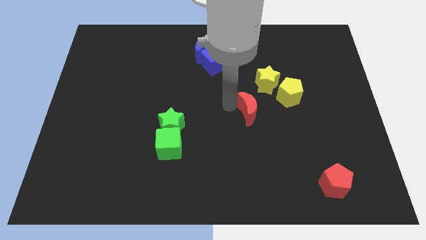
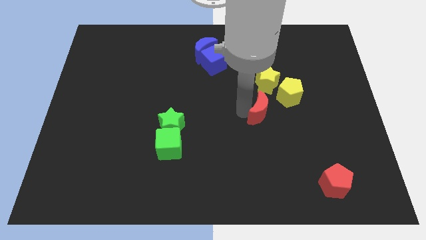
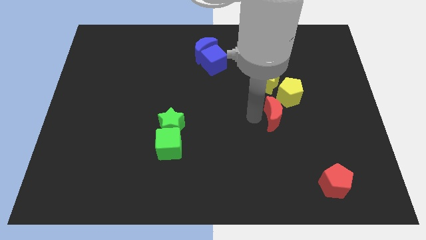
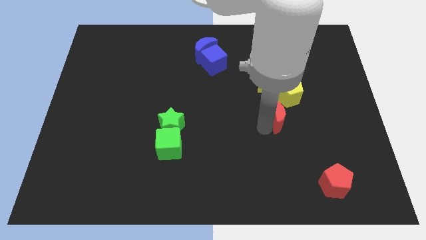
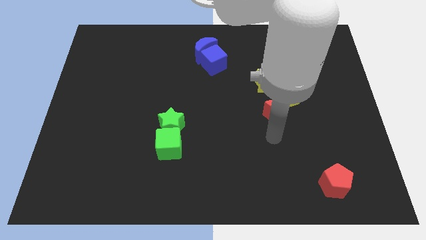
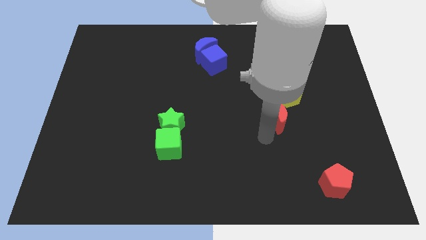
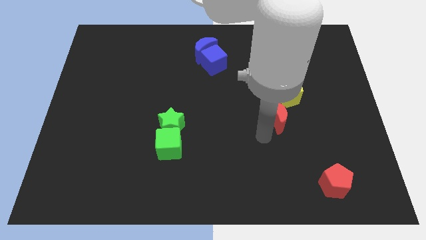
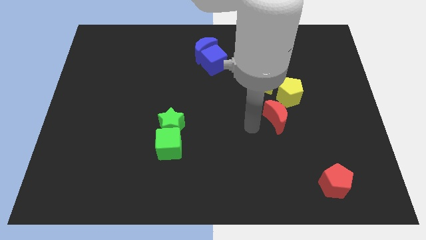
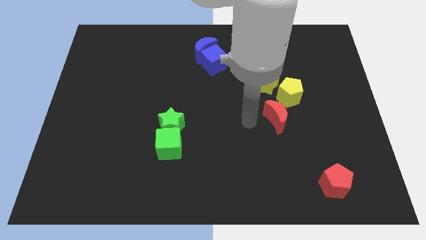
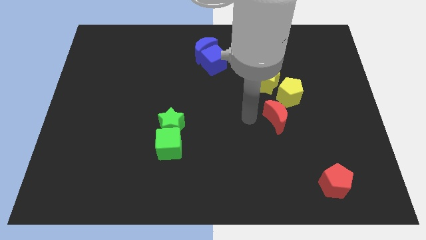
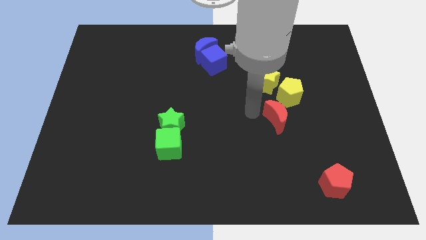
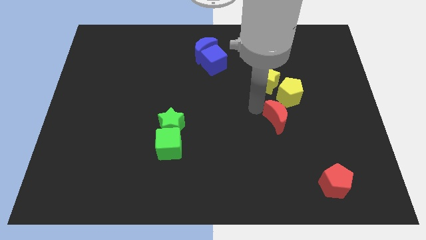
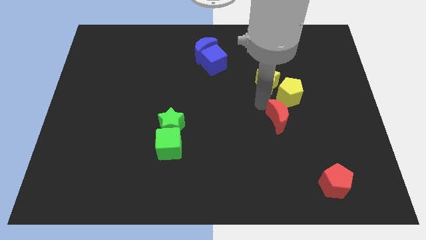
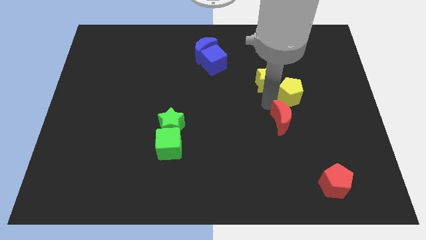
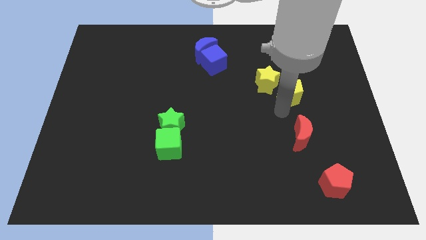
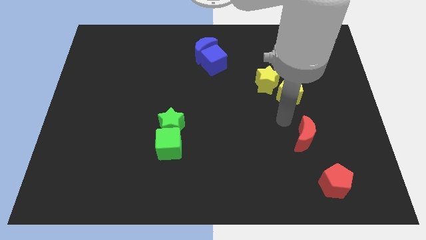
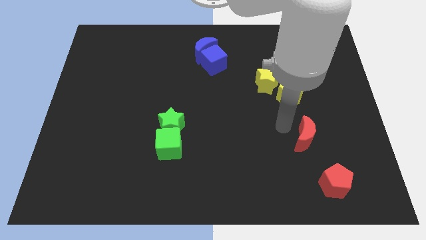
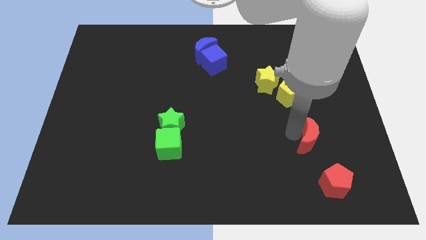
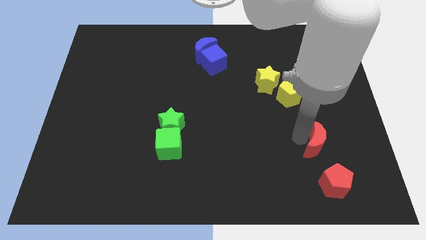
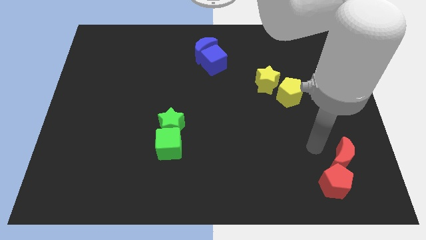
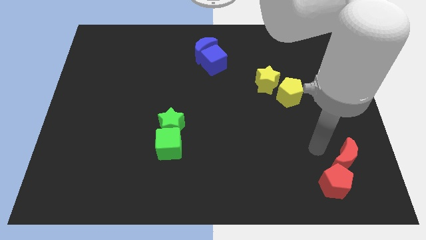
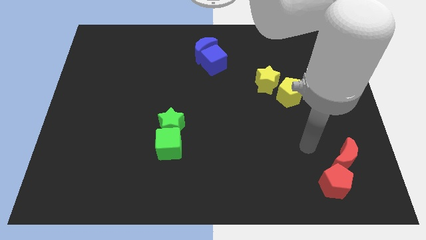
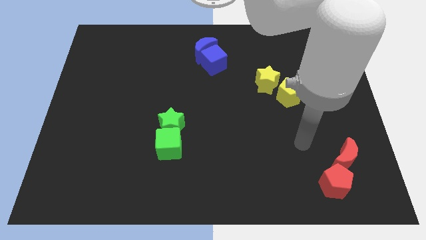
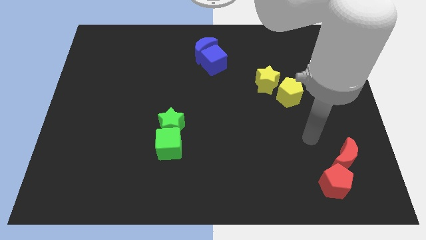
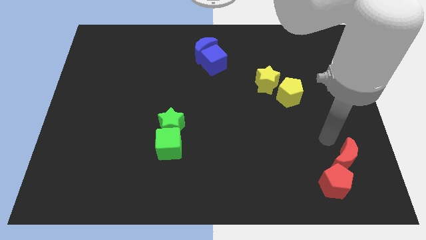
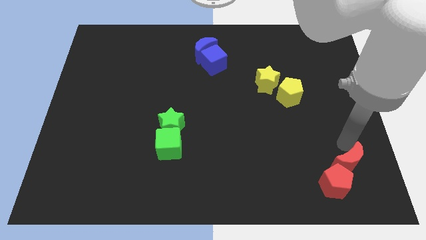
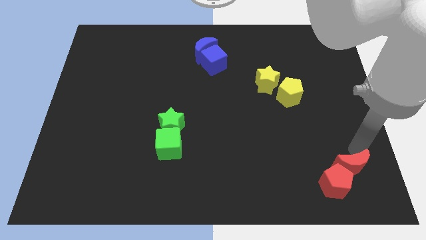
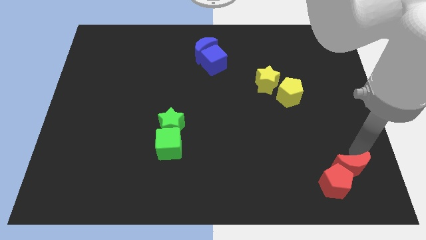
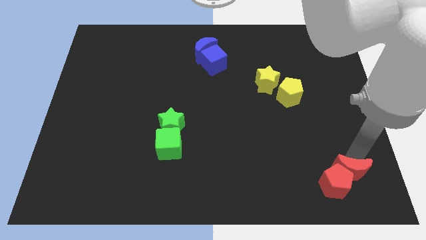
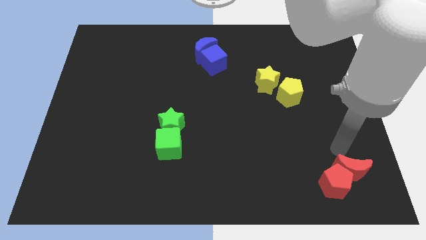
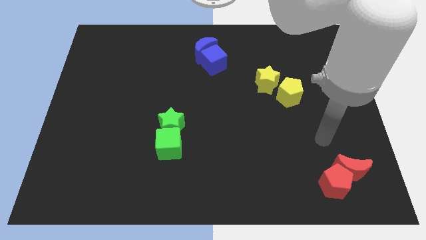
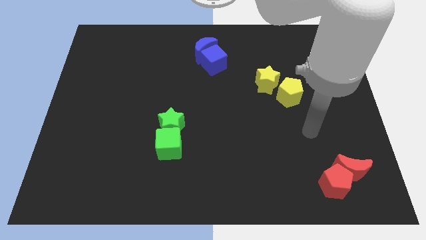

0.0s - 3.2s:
push the red moon into the red pentagon

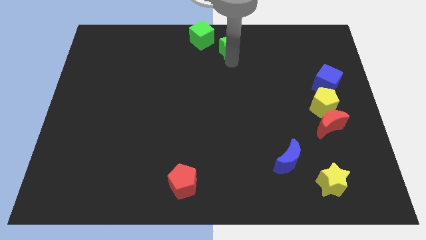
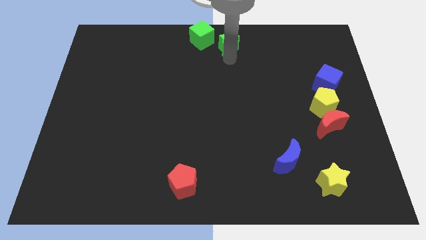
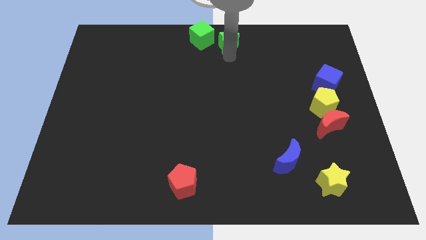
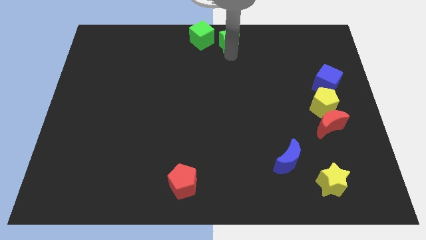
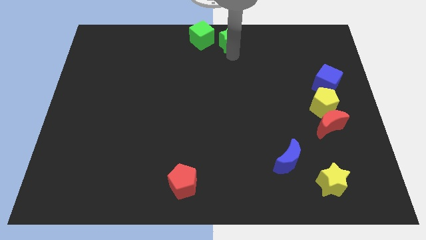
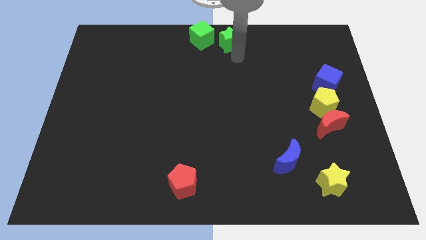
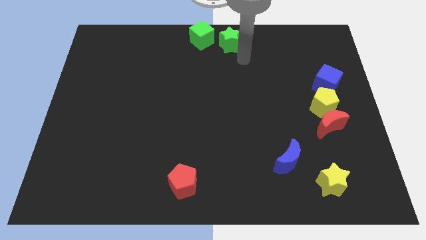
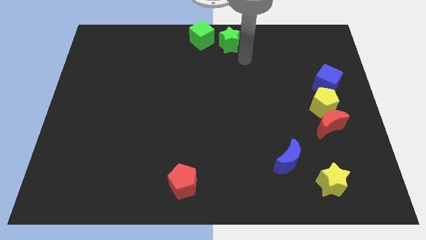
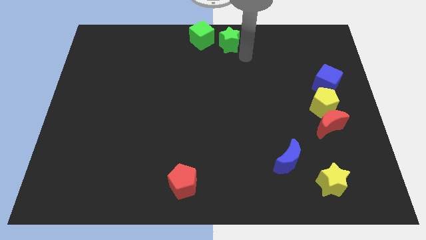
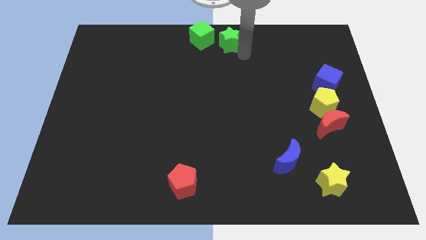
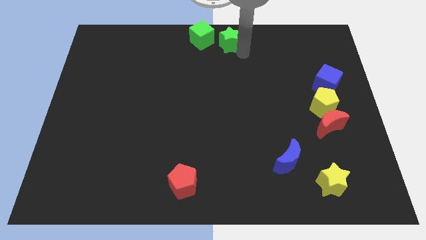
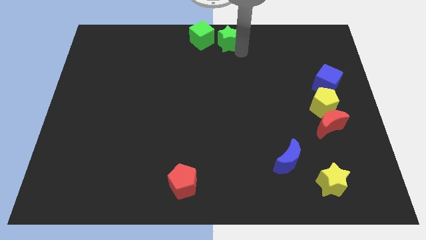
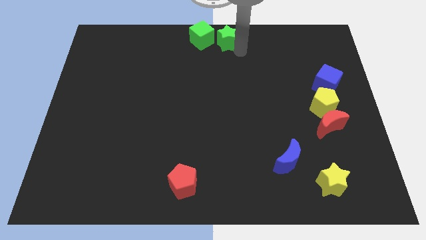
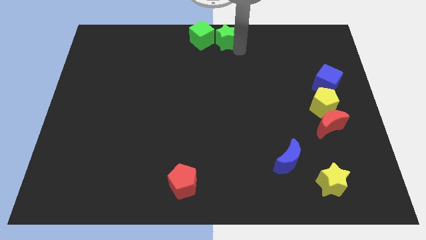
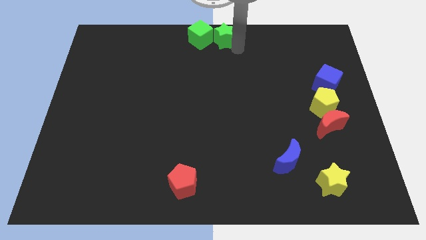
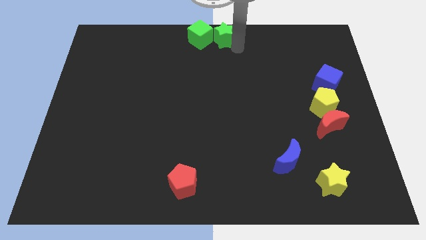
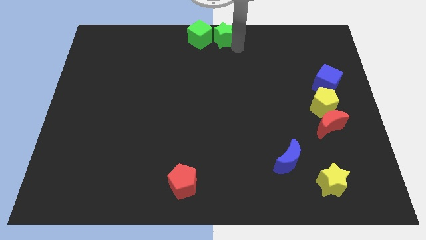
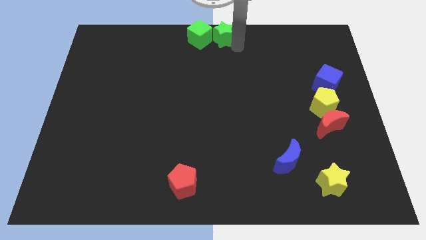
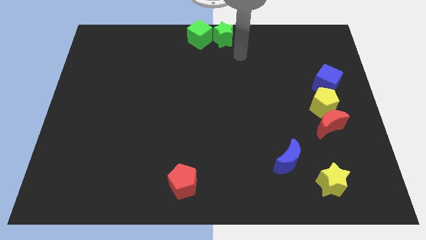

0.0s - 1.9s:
place green star beside green cube

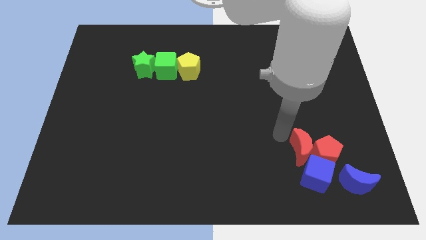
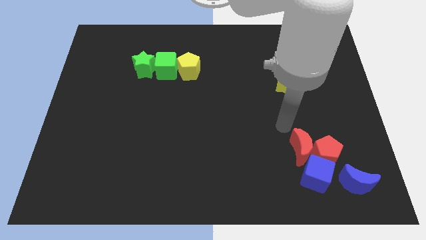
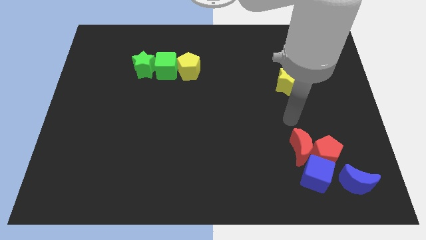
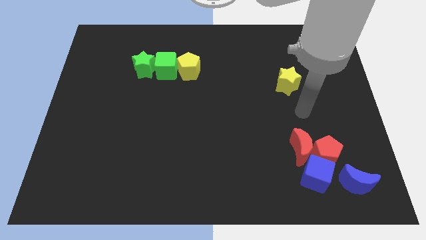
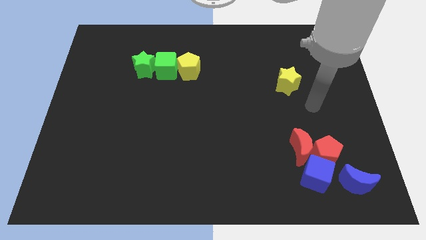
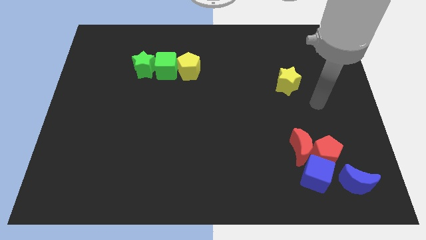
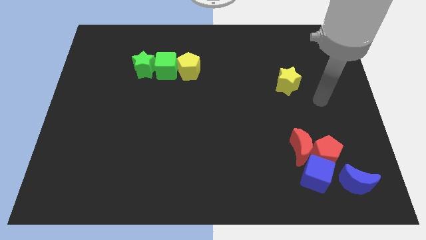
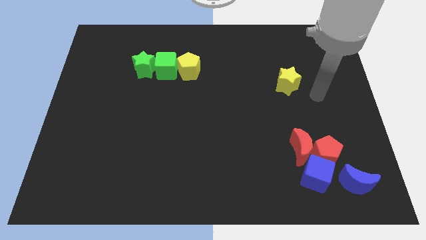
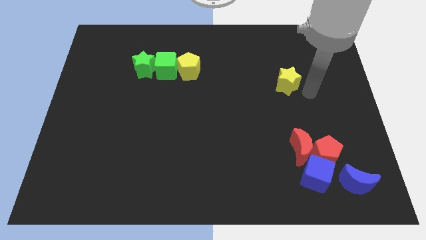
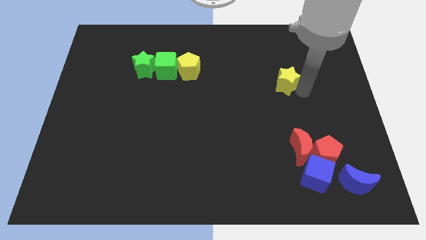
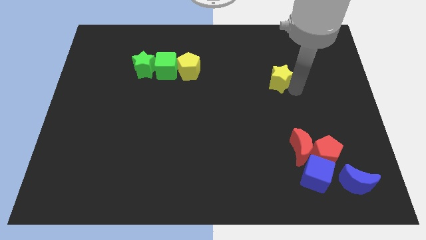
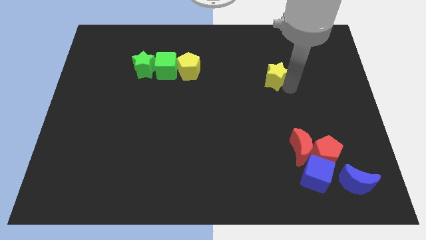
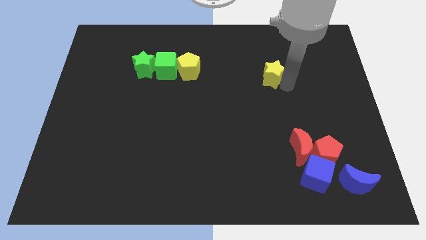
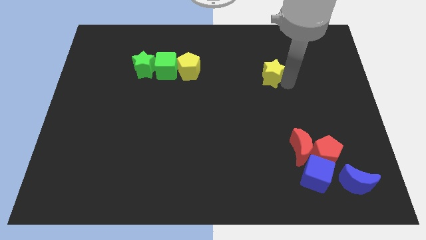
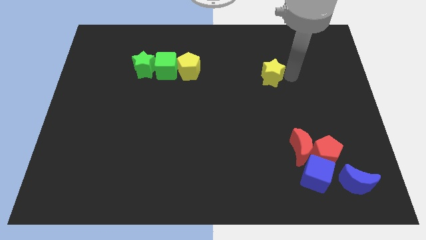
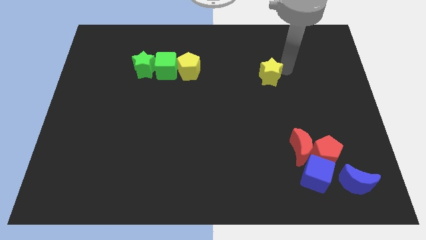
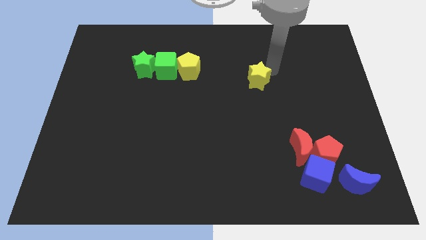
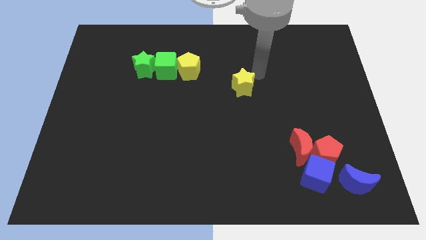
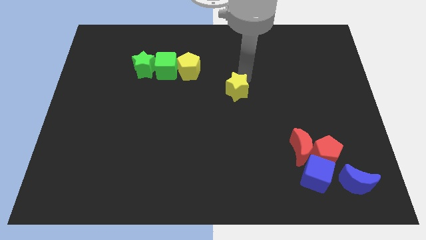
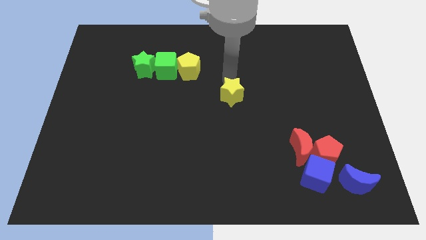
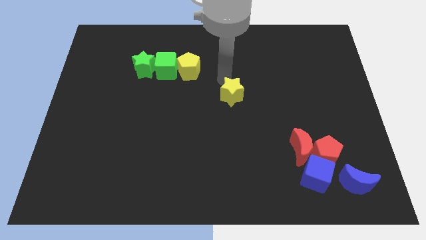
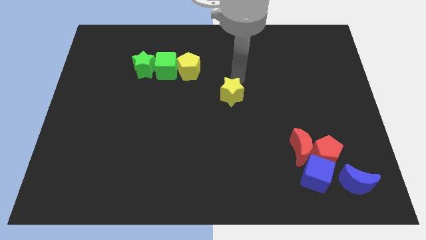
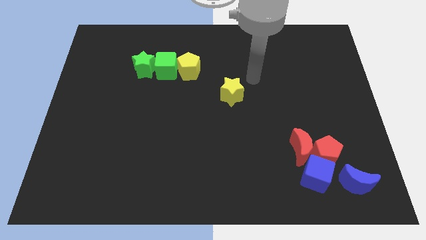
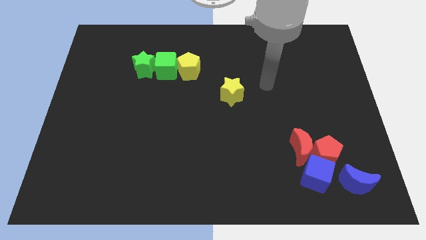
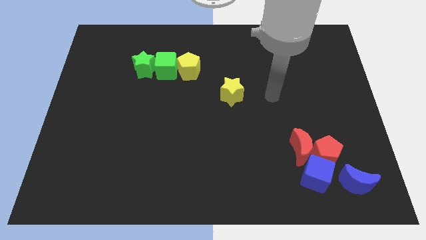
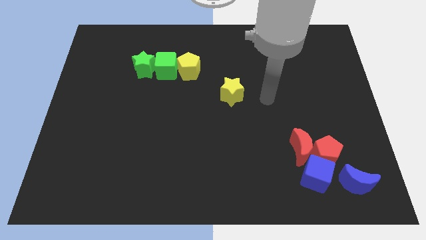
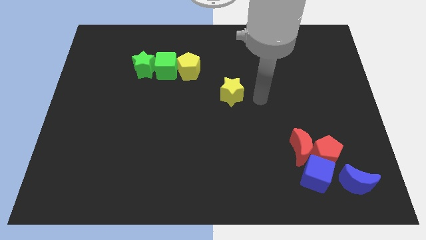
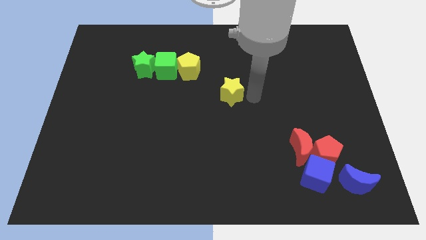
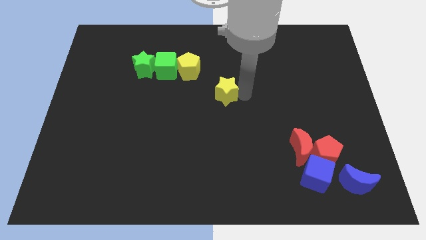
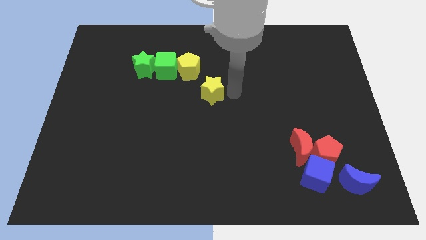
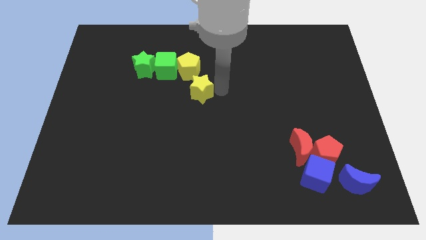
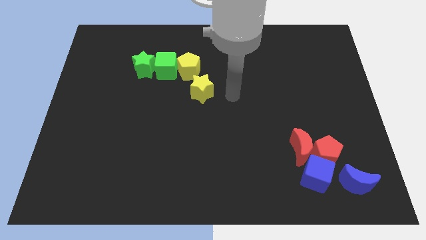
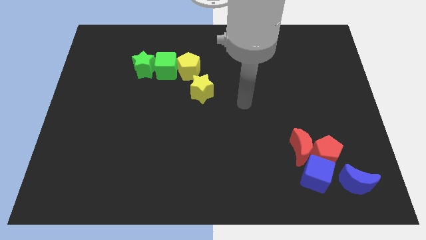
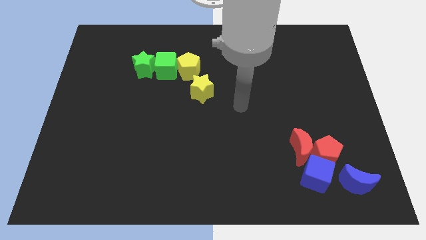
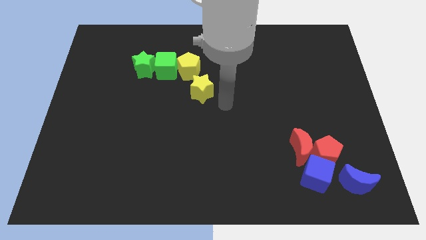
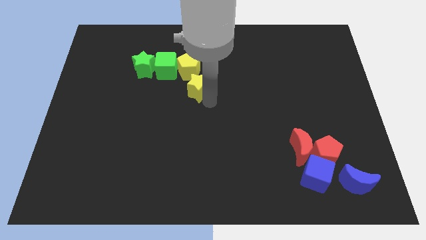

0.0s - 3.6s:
move yellow star to the bottom of yellow pentagon

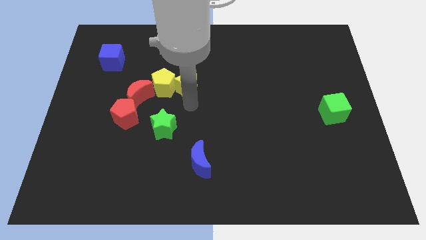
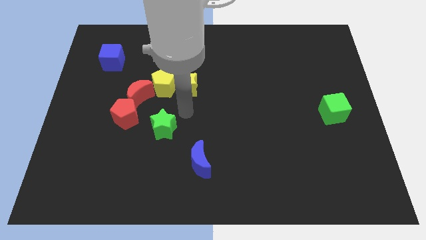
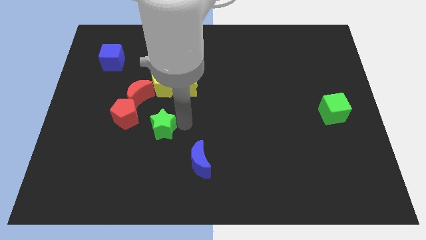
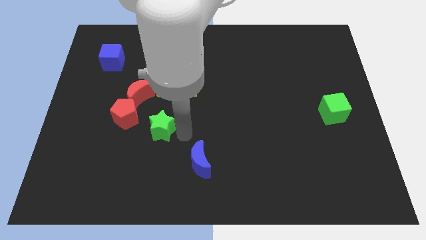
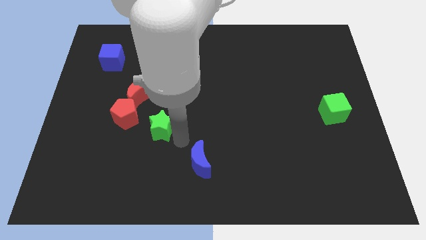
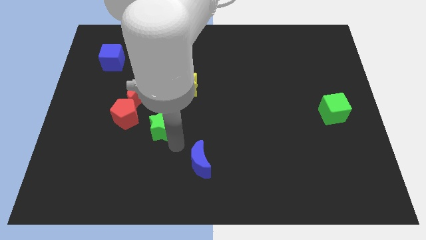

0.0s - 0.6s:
place your arm in between the green star and blue crescent
